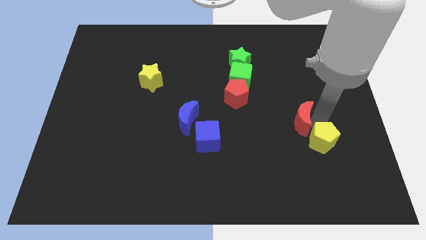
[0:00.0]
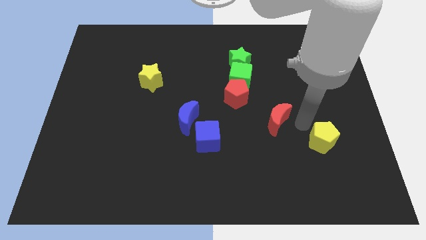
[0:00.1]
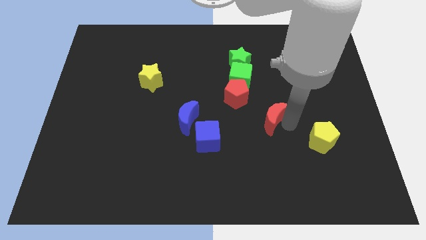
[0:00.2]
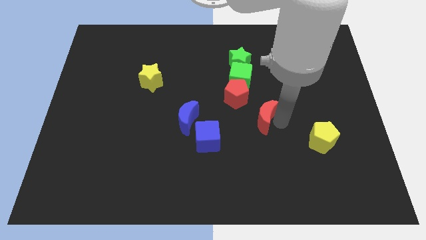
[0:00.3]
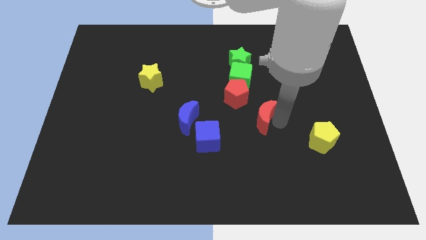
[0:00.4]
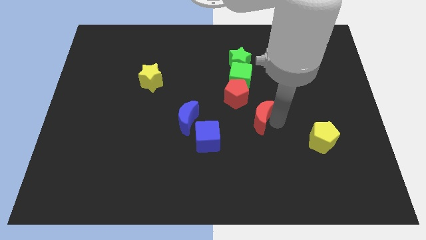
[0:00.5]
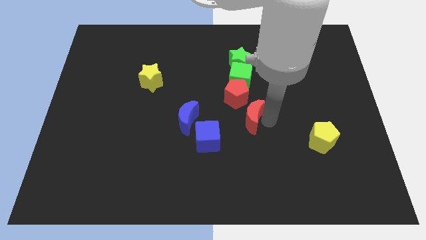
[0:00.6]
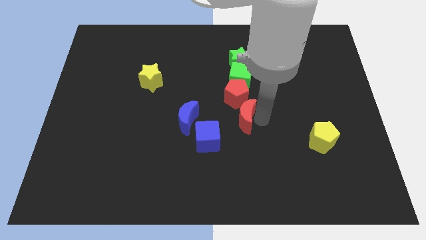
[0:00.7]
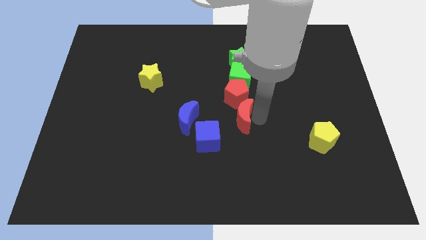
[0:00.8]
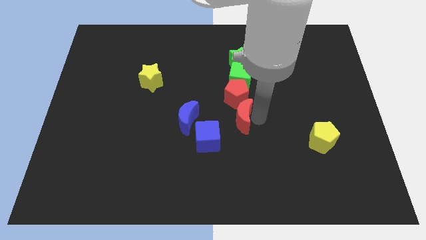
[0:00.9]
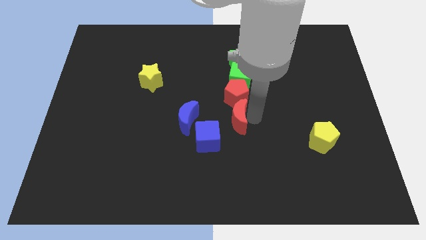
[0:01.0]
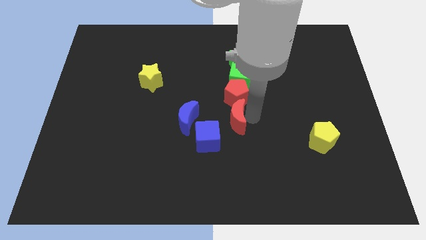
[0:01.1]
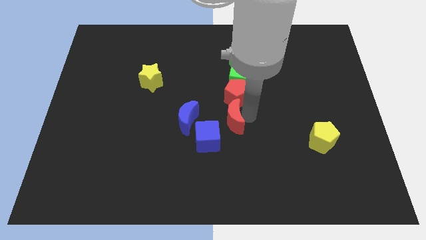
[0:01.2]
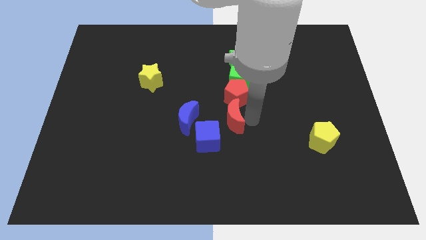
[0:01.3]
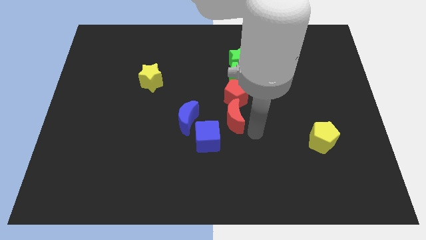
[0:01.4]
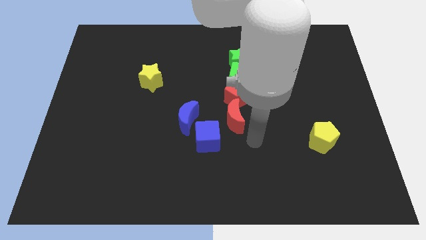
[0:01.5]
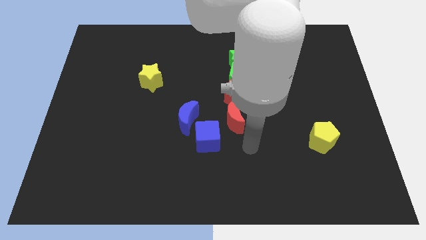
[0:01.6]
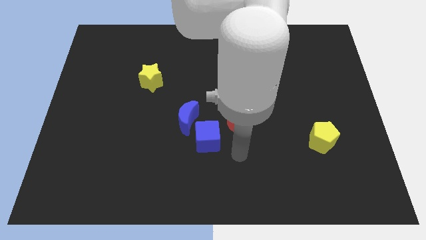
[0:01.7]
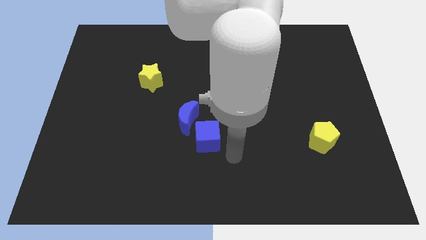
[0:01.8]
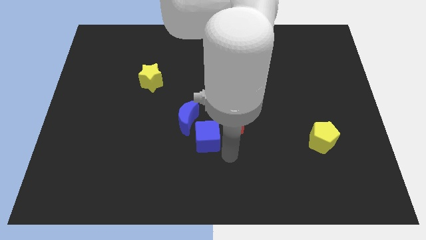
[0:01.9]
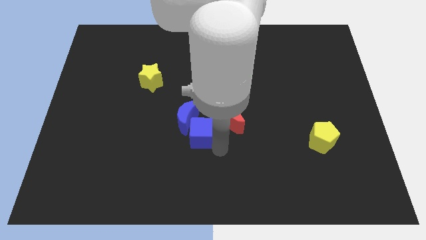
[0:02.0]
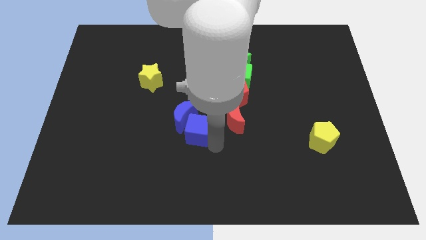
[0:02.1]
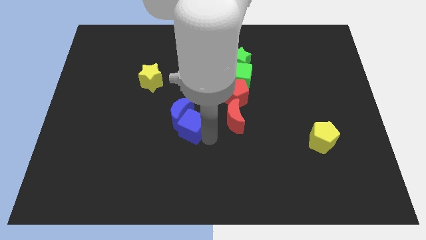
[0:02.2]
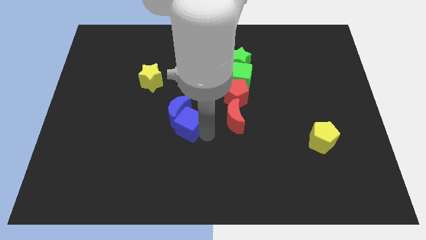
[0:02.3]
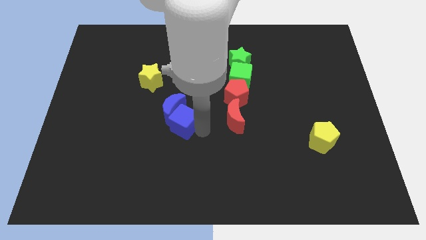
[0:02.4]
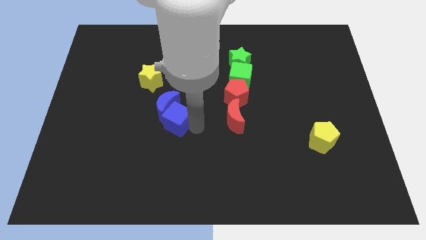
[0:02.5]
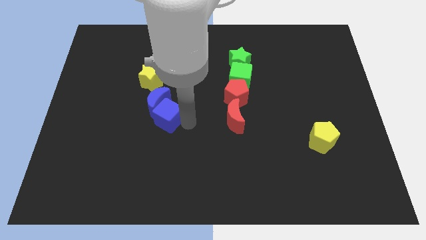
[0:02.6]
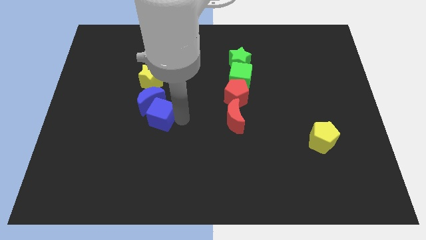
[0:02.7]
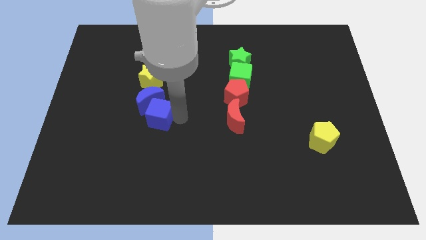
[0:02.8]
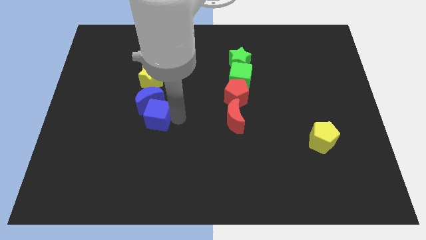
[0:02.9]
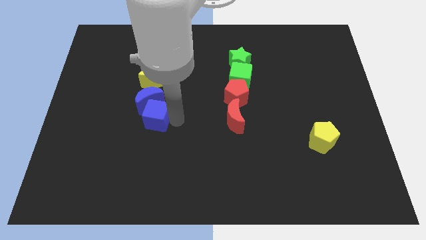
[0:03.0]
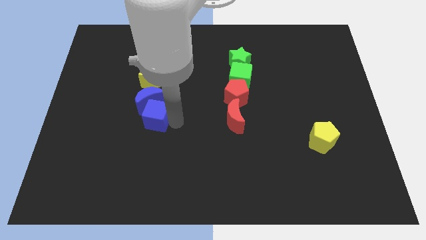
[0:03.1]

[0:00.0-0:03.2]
push the red moon and blue cube horizontal to each other

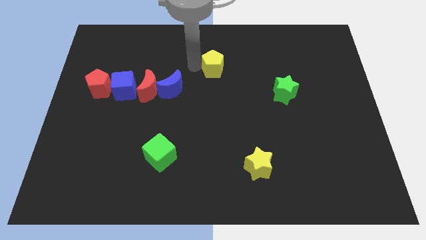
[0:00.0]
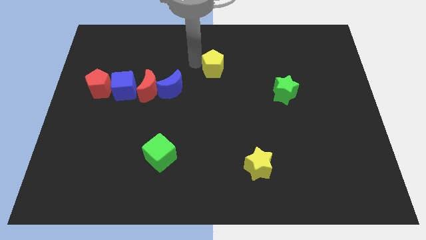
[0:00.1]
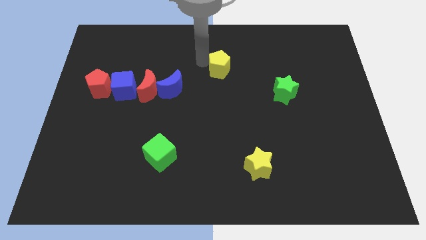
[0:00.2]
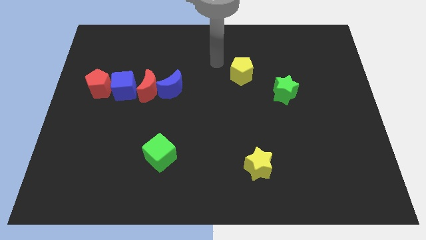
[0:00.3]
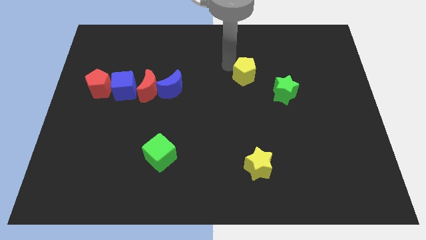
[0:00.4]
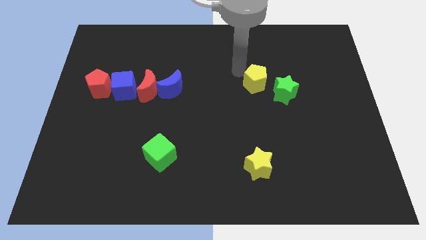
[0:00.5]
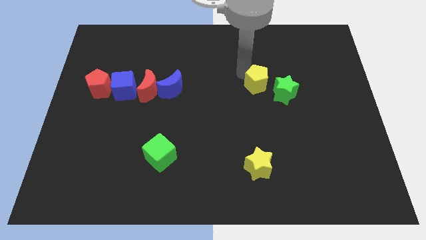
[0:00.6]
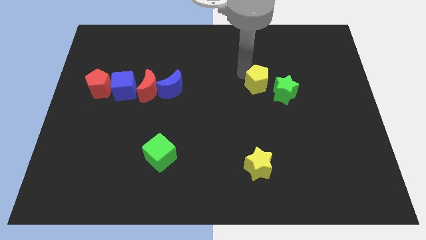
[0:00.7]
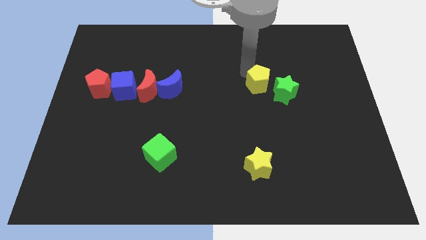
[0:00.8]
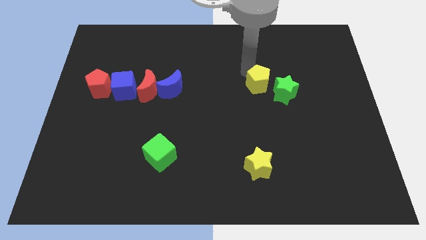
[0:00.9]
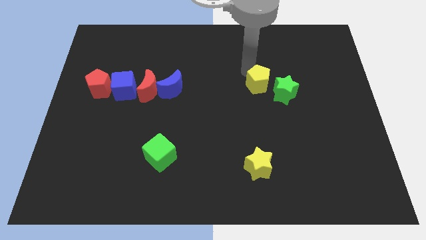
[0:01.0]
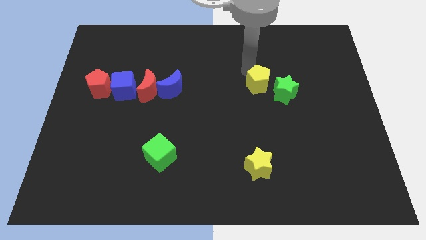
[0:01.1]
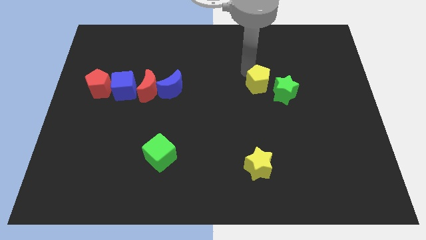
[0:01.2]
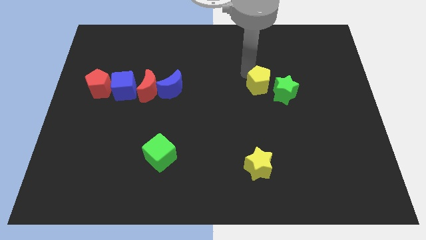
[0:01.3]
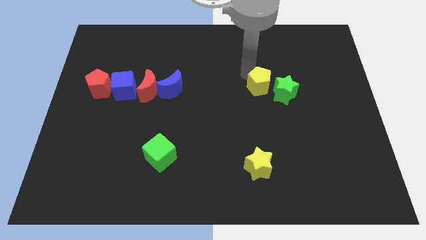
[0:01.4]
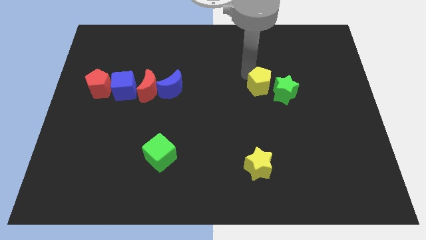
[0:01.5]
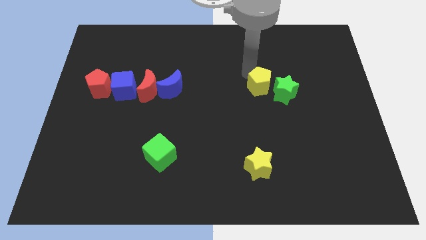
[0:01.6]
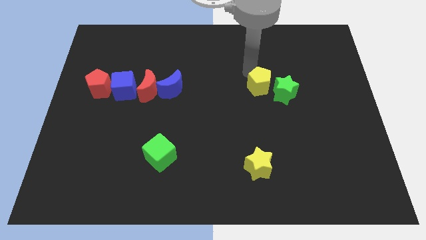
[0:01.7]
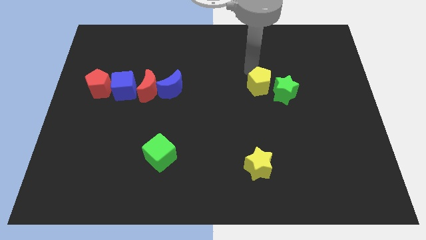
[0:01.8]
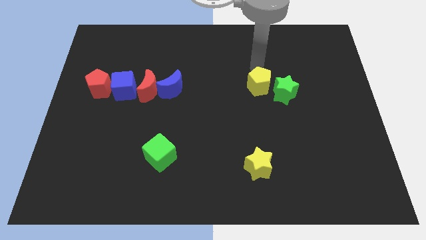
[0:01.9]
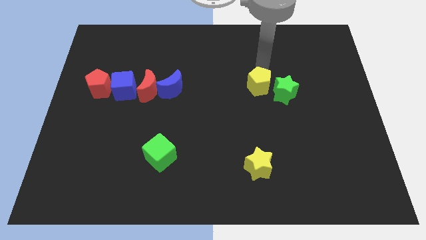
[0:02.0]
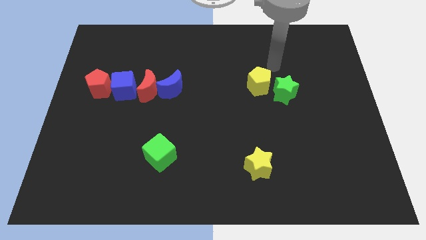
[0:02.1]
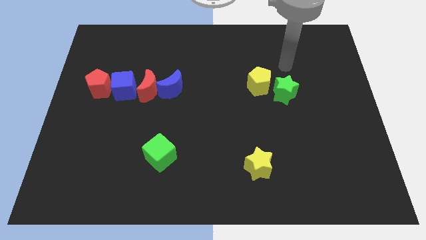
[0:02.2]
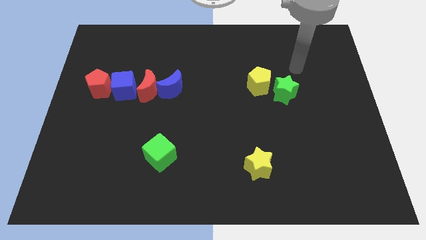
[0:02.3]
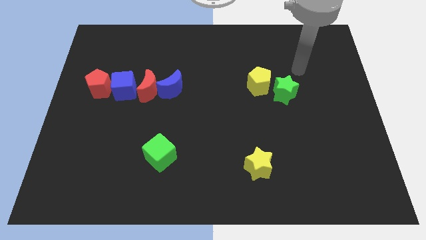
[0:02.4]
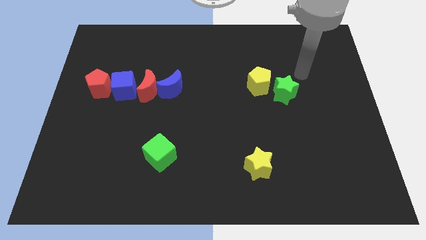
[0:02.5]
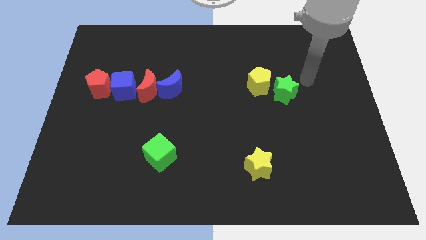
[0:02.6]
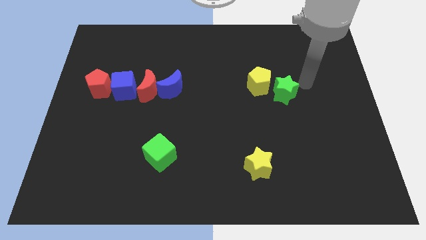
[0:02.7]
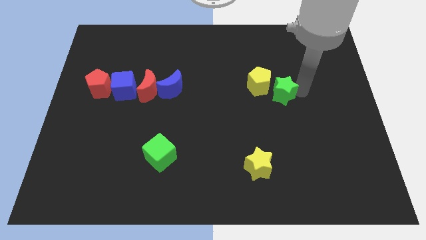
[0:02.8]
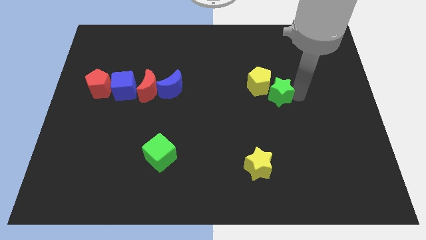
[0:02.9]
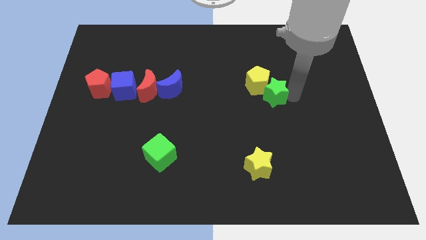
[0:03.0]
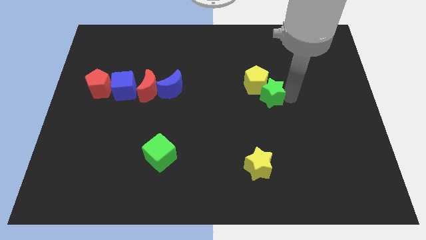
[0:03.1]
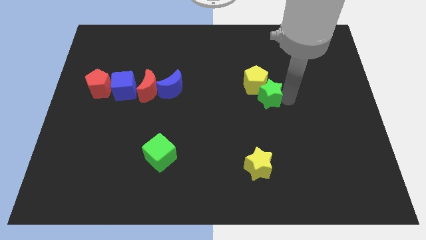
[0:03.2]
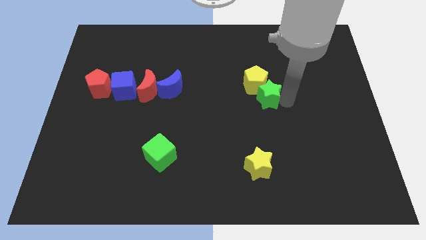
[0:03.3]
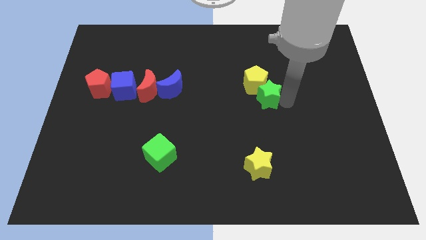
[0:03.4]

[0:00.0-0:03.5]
place the yellow pentagon and green star together at the top side of the yellow star

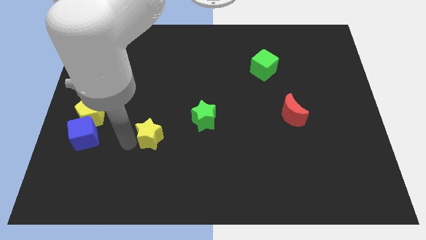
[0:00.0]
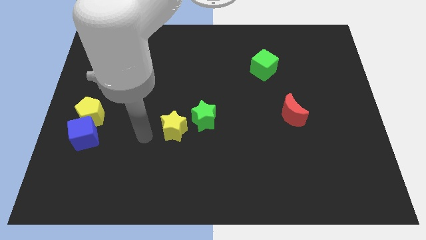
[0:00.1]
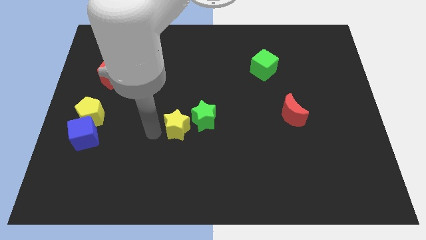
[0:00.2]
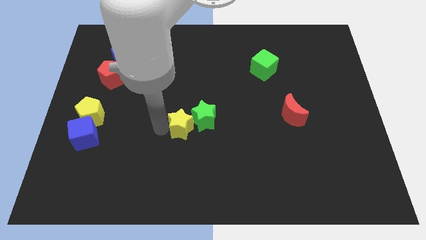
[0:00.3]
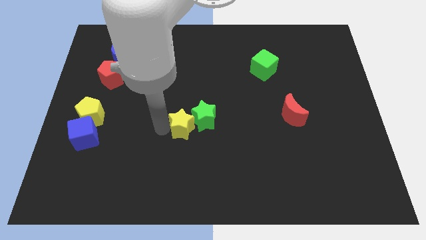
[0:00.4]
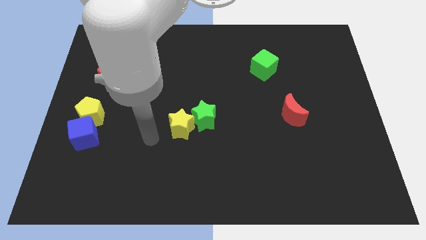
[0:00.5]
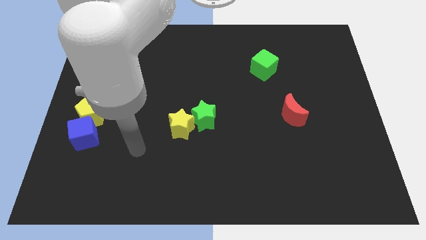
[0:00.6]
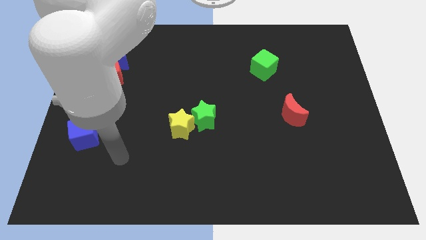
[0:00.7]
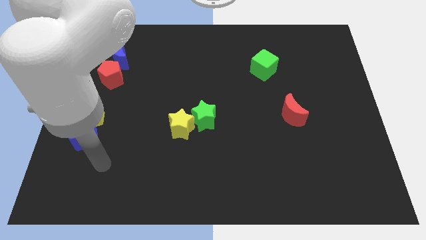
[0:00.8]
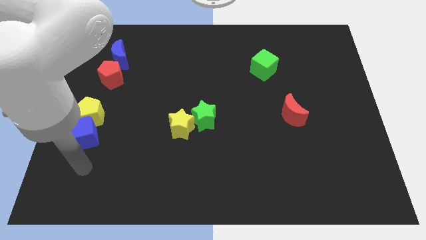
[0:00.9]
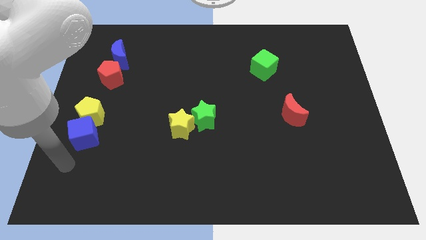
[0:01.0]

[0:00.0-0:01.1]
push the yellow star into the green star

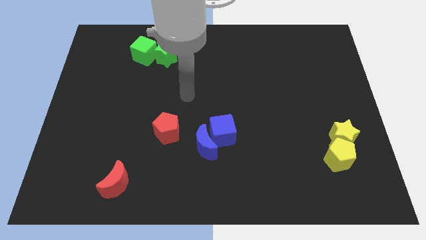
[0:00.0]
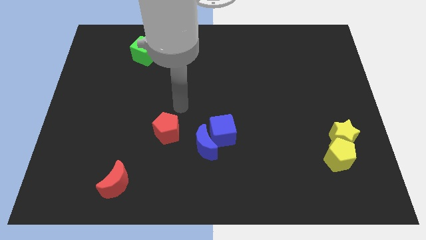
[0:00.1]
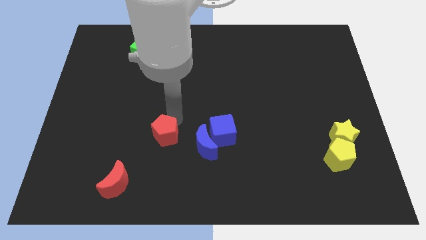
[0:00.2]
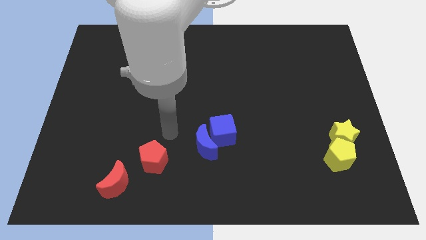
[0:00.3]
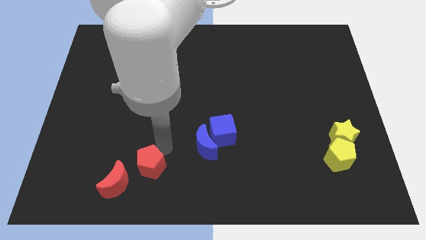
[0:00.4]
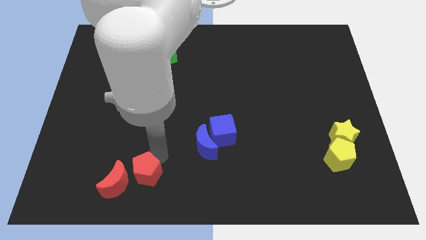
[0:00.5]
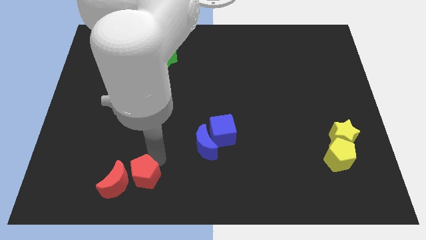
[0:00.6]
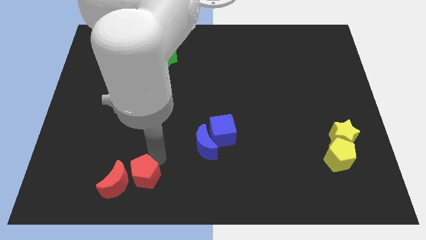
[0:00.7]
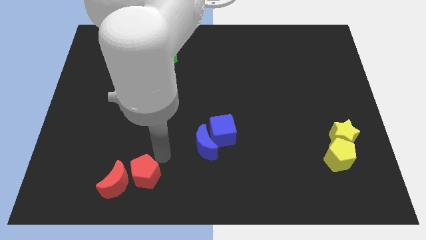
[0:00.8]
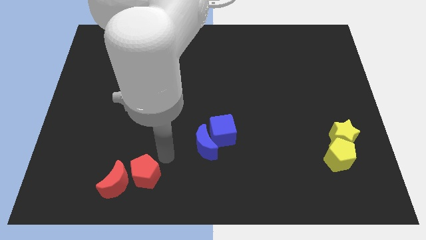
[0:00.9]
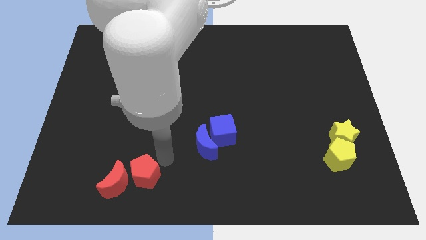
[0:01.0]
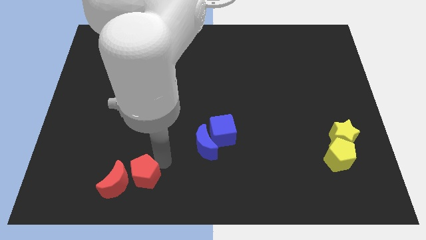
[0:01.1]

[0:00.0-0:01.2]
move the red pentagon towards the red crescent
